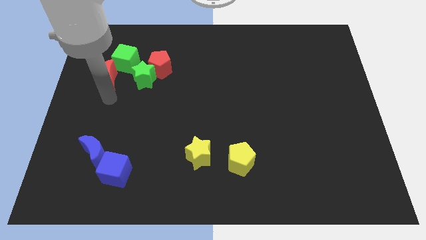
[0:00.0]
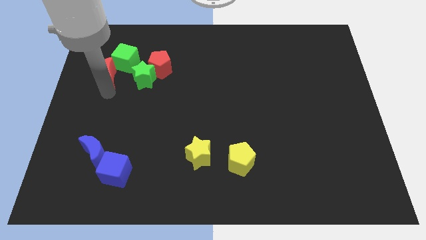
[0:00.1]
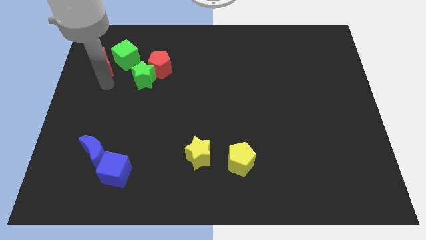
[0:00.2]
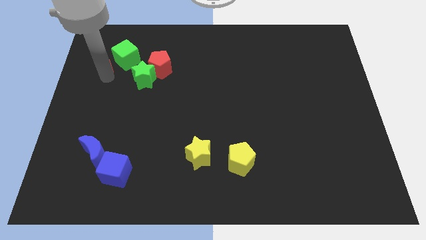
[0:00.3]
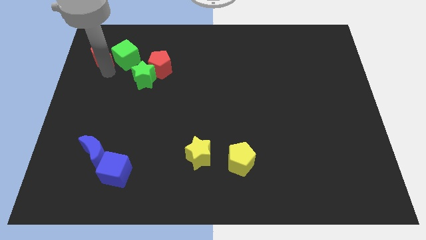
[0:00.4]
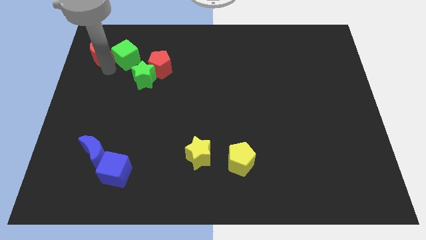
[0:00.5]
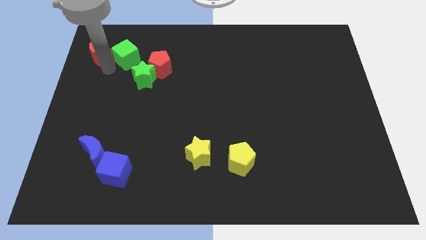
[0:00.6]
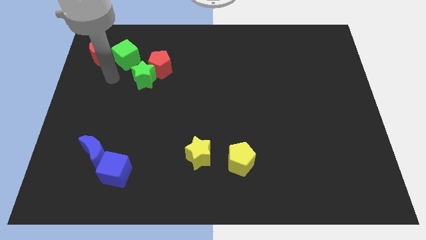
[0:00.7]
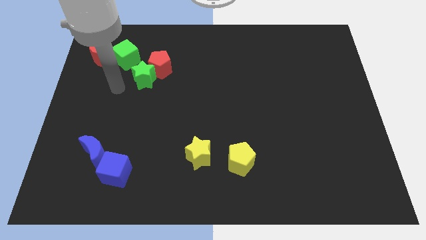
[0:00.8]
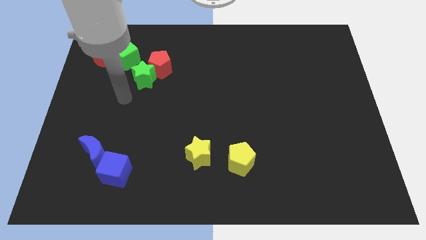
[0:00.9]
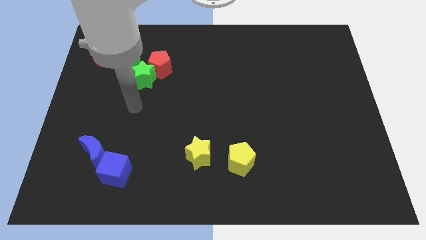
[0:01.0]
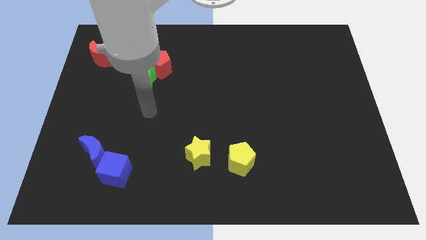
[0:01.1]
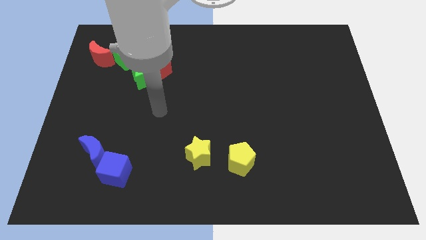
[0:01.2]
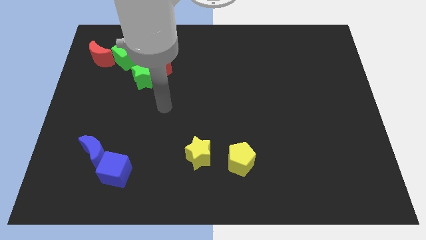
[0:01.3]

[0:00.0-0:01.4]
move the red crescent to the left of the green cube

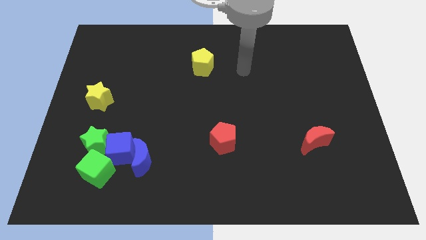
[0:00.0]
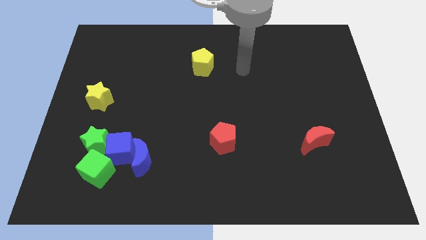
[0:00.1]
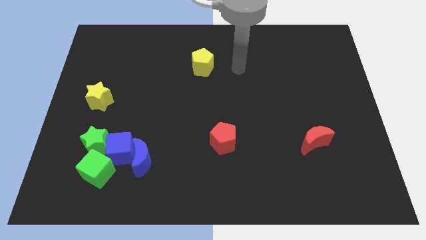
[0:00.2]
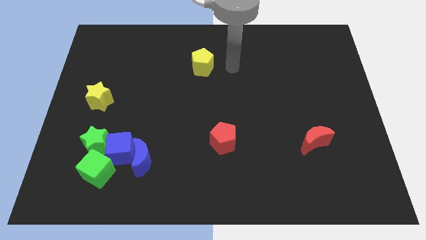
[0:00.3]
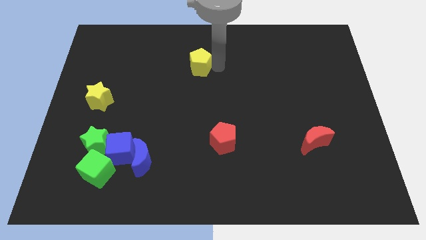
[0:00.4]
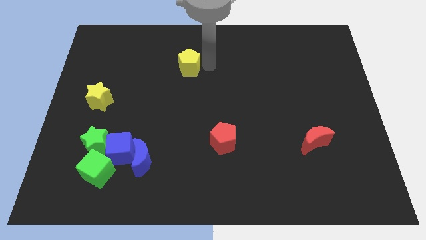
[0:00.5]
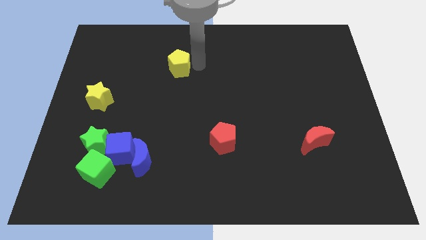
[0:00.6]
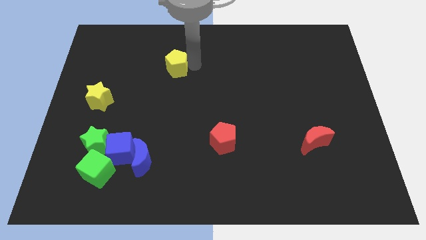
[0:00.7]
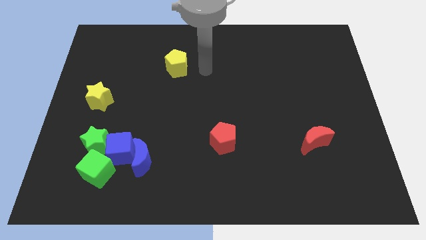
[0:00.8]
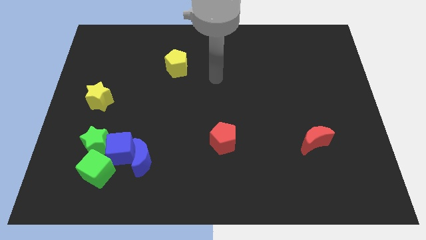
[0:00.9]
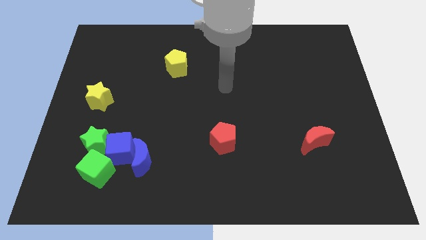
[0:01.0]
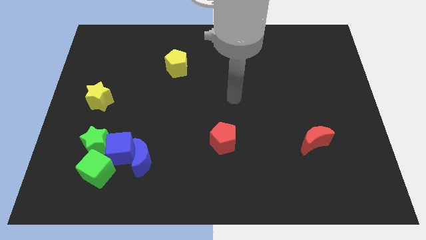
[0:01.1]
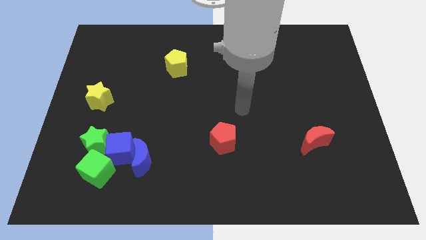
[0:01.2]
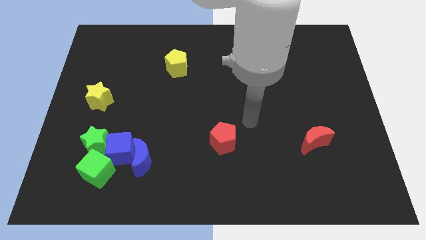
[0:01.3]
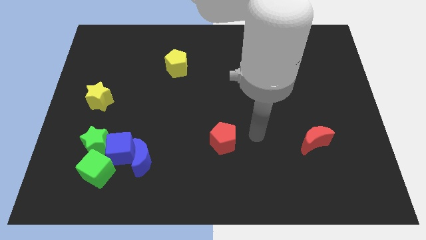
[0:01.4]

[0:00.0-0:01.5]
place the yellow pentagon diagonally top left to the red pentagon

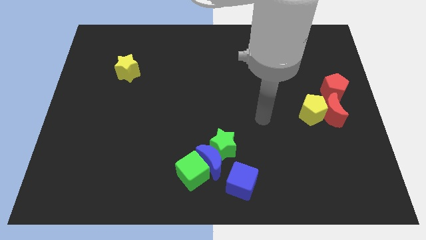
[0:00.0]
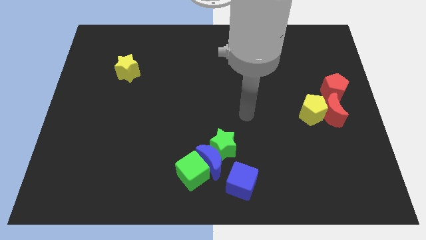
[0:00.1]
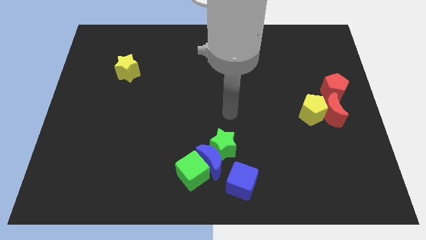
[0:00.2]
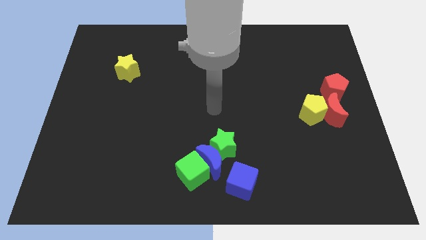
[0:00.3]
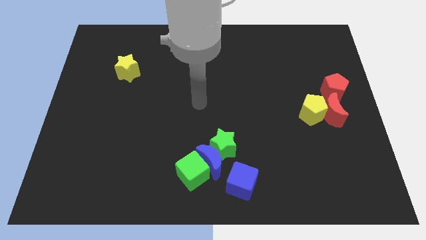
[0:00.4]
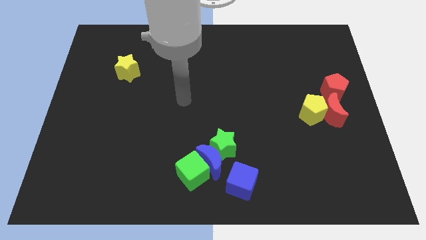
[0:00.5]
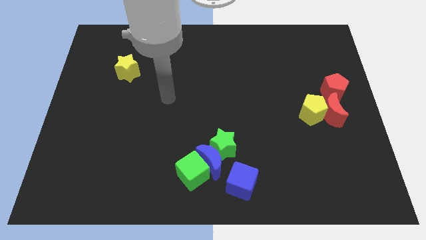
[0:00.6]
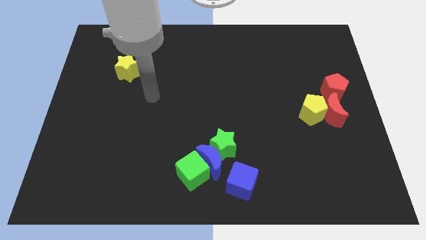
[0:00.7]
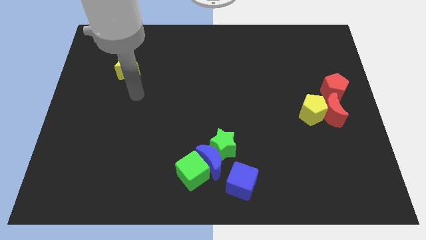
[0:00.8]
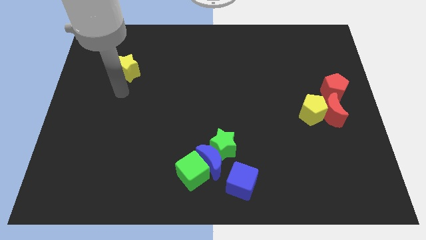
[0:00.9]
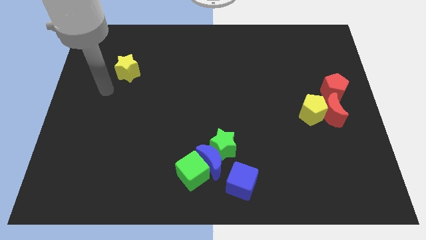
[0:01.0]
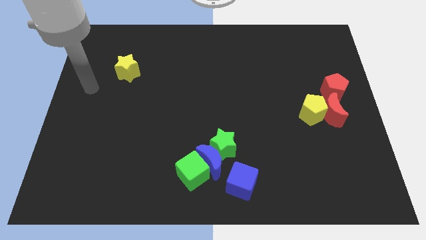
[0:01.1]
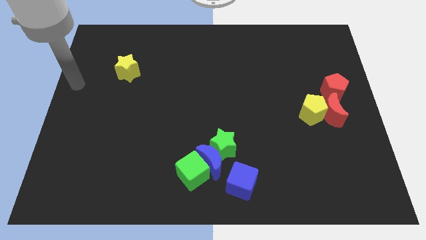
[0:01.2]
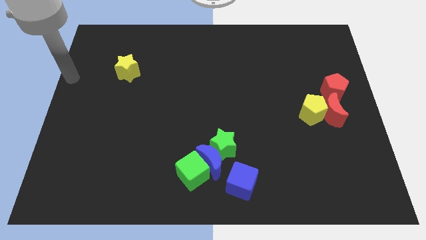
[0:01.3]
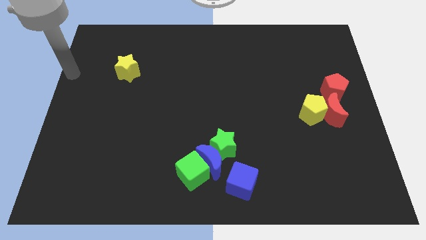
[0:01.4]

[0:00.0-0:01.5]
move your hand towards the top left

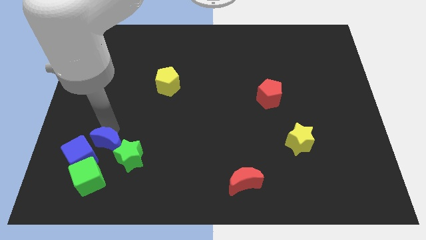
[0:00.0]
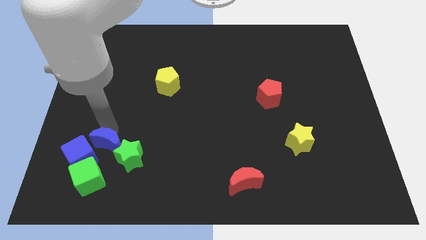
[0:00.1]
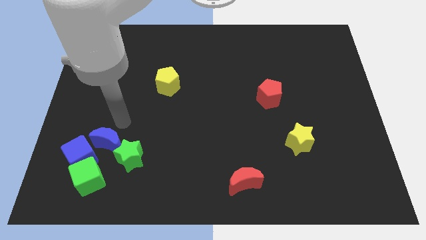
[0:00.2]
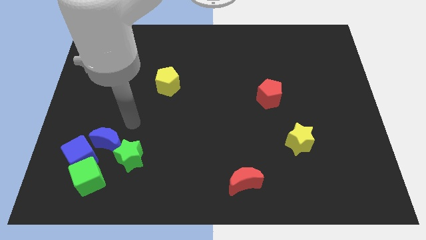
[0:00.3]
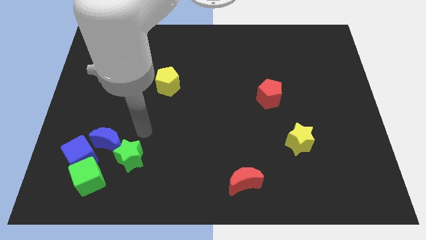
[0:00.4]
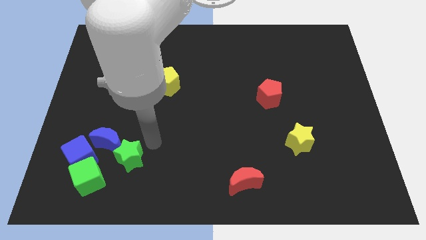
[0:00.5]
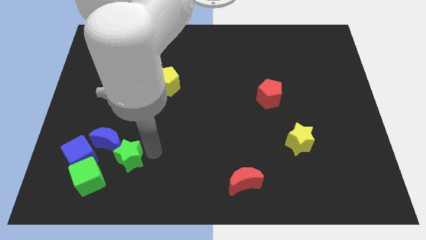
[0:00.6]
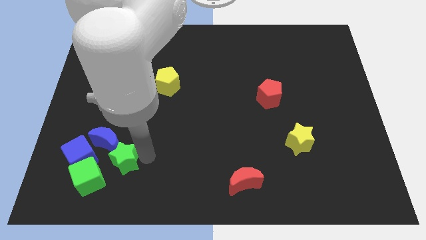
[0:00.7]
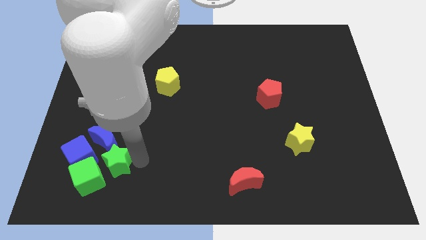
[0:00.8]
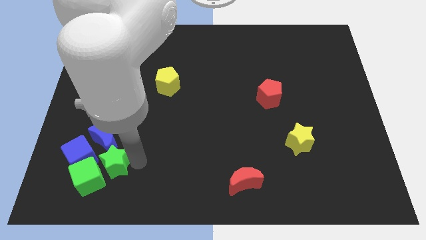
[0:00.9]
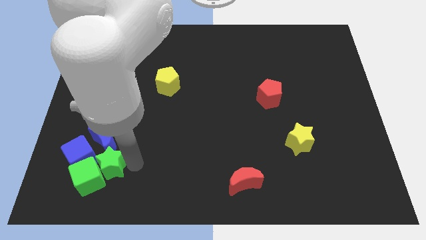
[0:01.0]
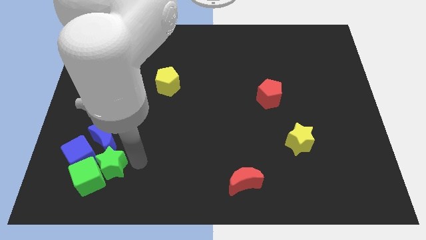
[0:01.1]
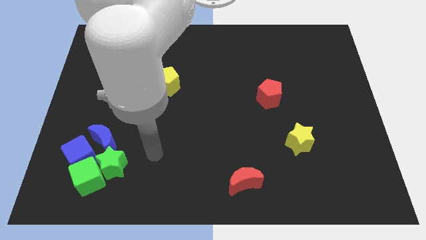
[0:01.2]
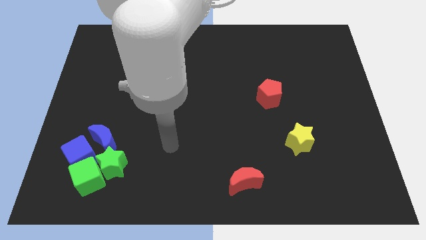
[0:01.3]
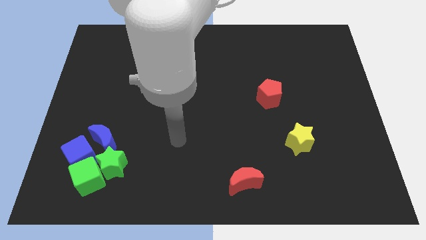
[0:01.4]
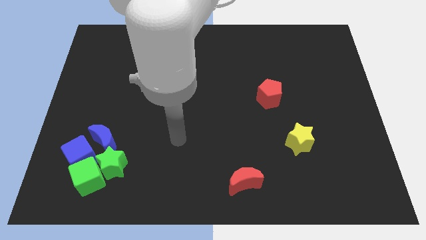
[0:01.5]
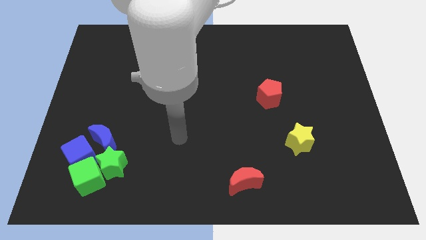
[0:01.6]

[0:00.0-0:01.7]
place green star to the right side of the green cube

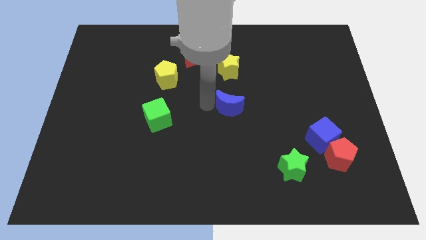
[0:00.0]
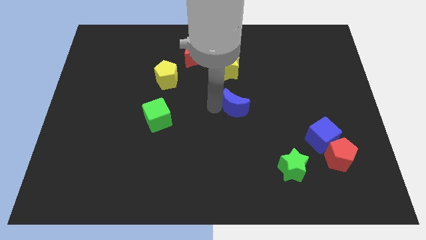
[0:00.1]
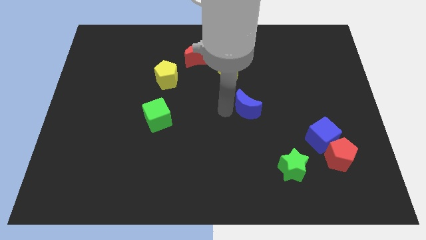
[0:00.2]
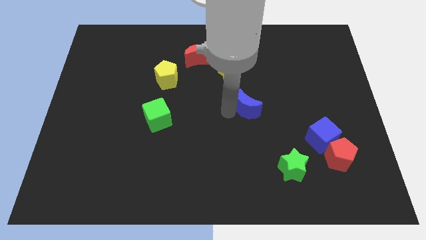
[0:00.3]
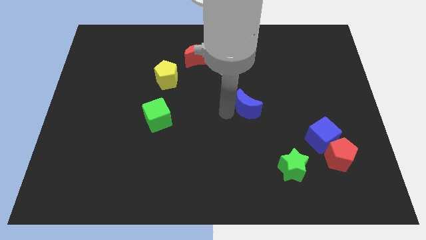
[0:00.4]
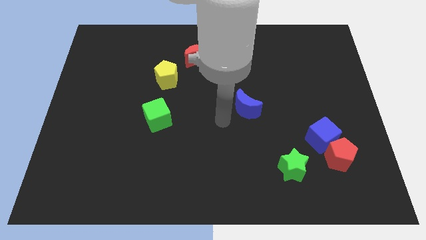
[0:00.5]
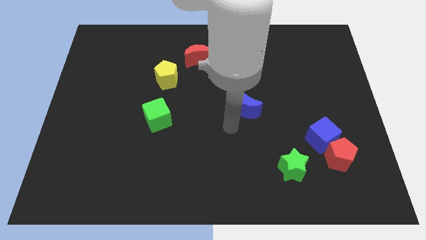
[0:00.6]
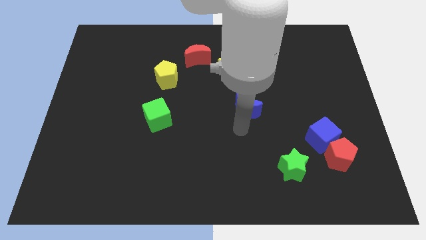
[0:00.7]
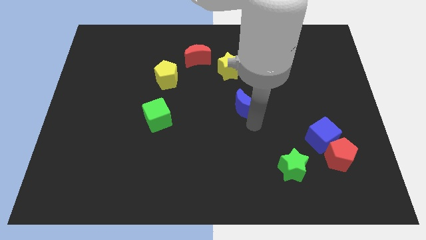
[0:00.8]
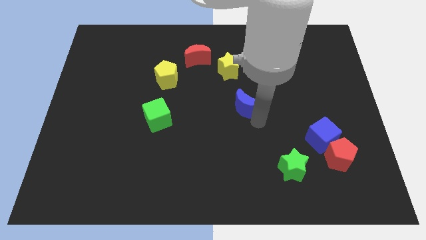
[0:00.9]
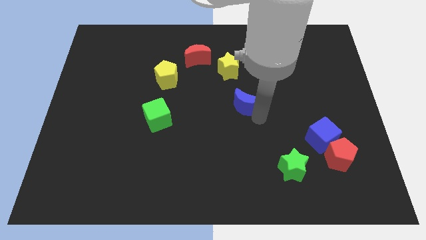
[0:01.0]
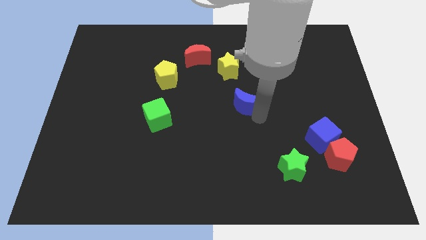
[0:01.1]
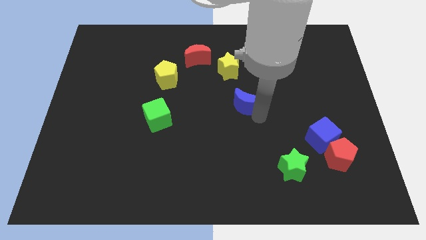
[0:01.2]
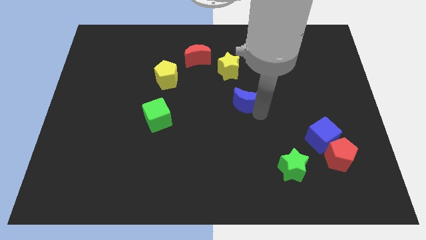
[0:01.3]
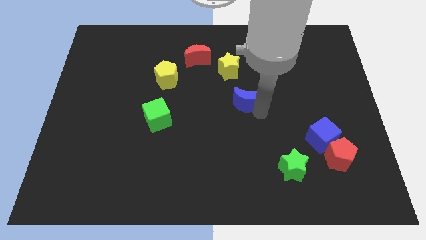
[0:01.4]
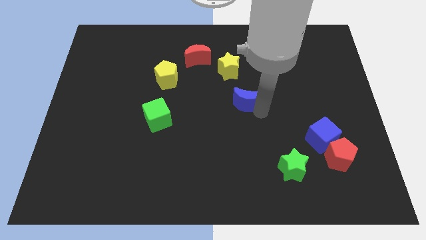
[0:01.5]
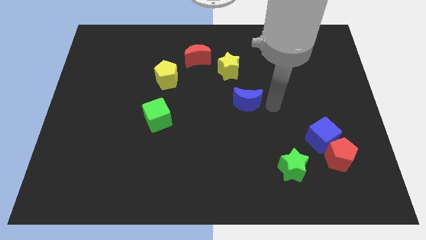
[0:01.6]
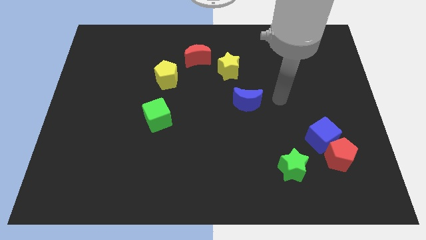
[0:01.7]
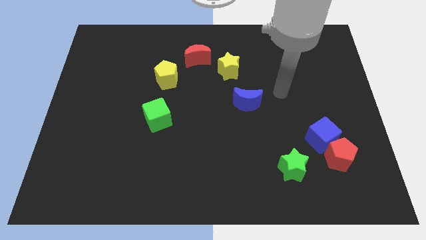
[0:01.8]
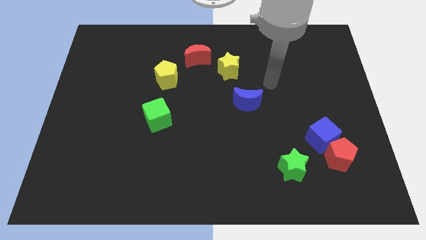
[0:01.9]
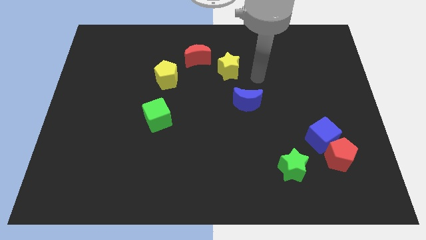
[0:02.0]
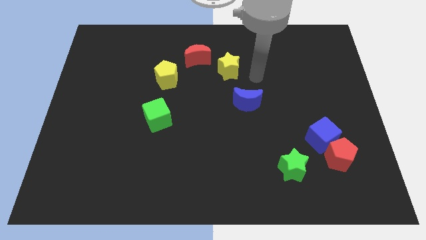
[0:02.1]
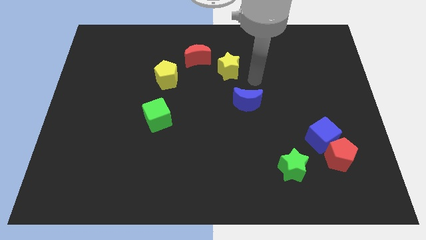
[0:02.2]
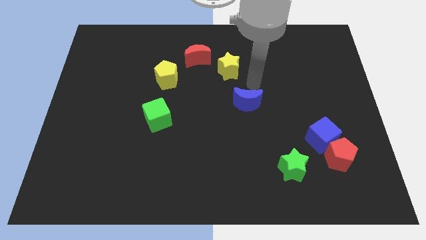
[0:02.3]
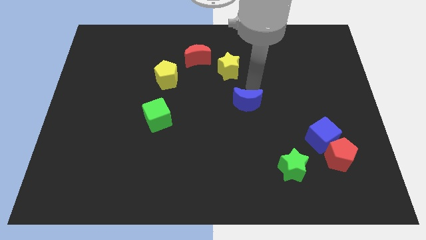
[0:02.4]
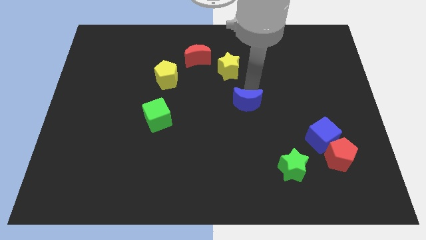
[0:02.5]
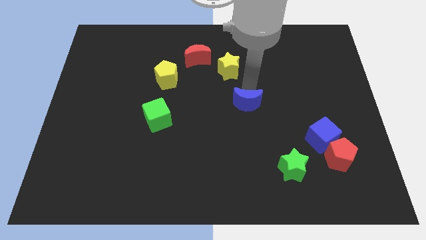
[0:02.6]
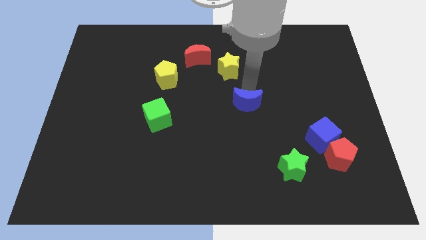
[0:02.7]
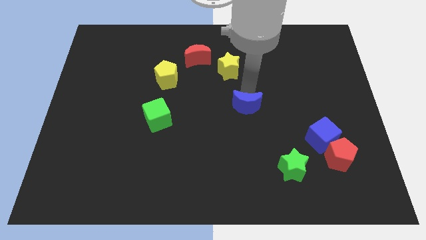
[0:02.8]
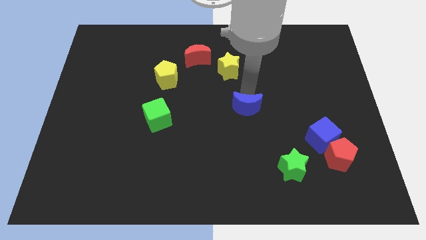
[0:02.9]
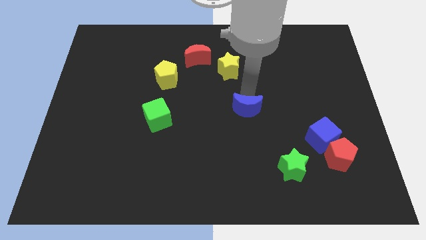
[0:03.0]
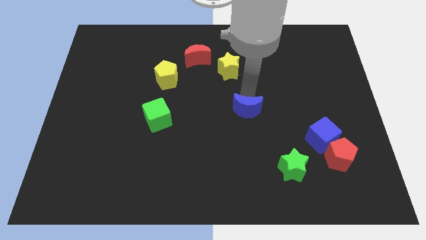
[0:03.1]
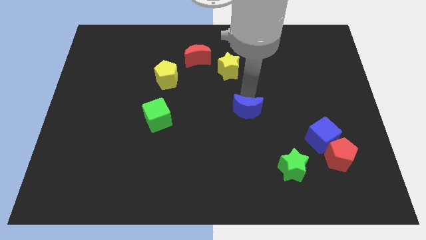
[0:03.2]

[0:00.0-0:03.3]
push the blue crescent slightly to the bottom of the yellow star
